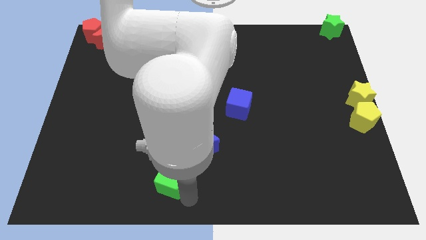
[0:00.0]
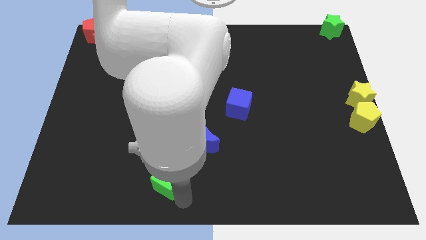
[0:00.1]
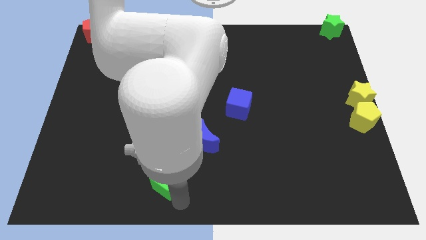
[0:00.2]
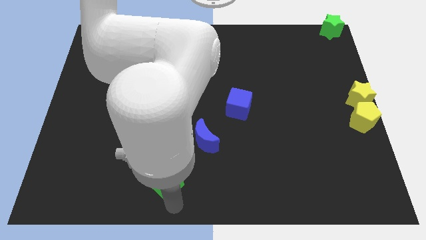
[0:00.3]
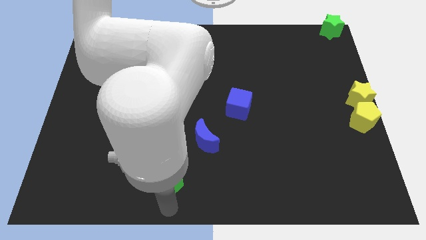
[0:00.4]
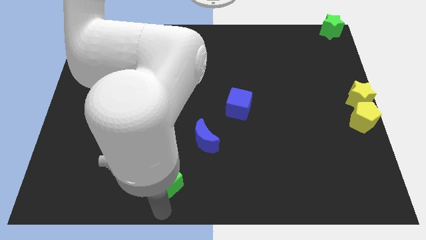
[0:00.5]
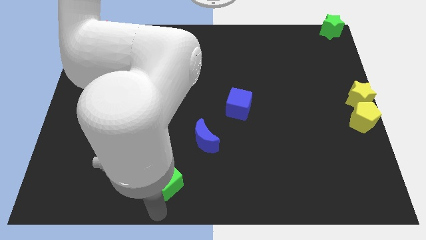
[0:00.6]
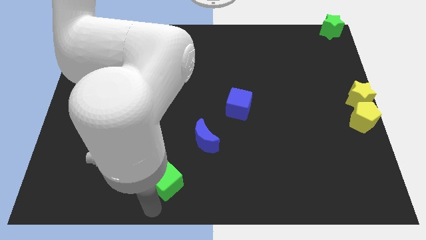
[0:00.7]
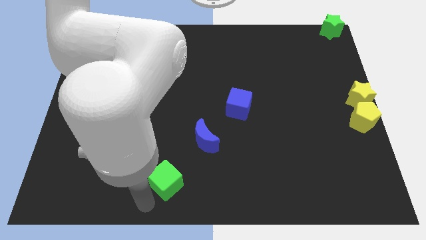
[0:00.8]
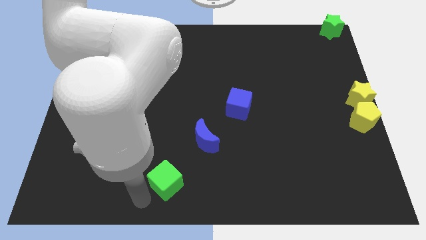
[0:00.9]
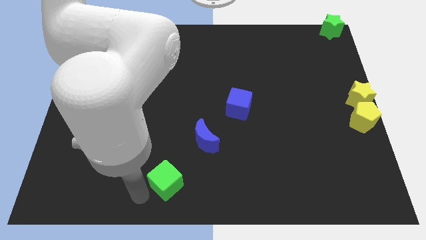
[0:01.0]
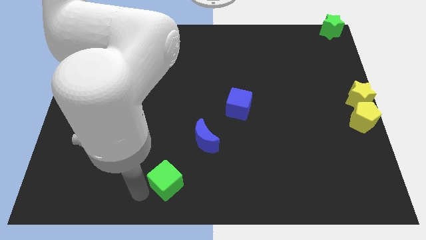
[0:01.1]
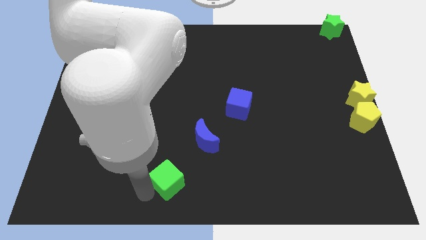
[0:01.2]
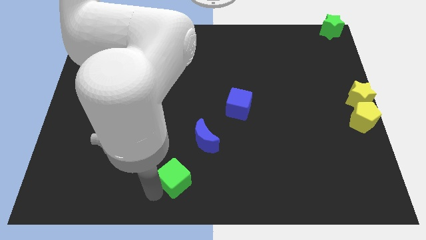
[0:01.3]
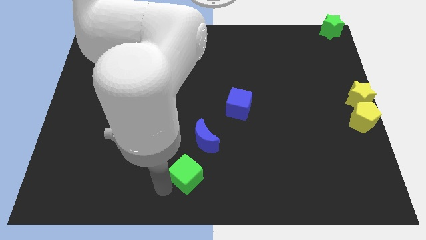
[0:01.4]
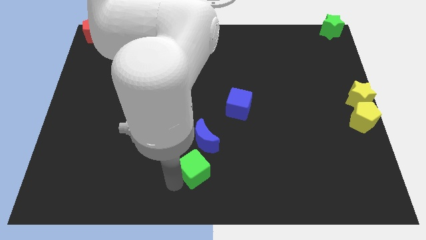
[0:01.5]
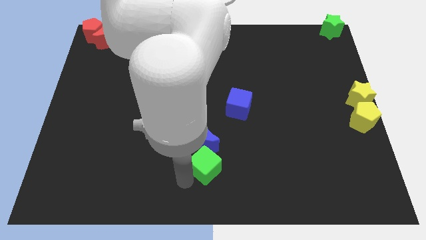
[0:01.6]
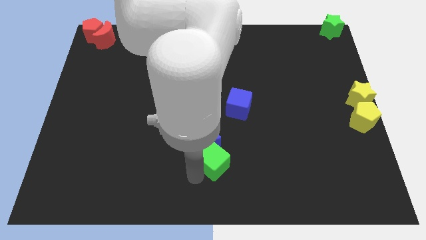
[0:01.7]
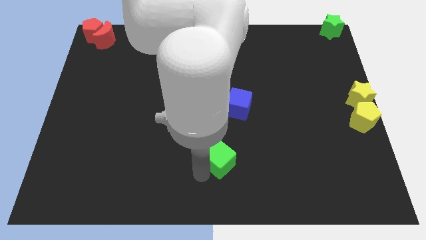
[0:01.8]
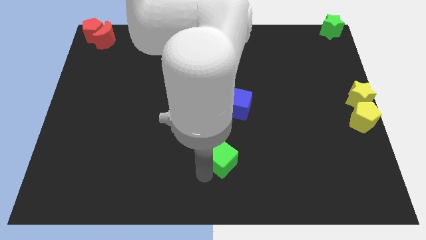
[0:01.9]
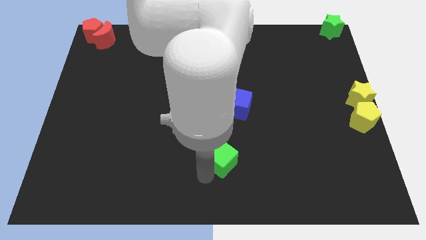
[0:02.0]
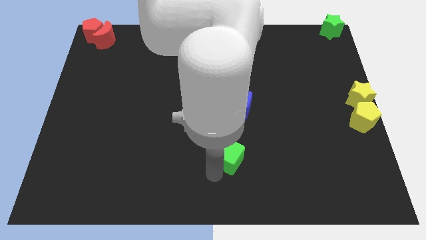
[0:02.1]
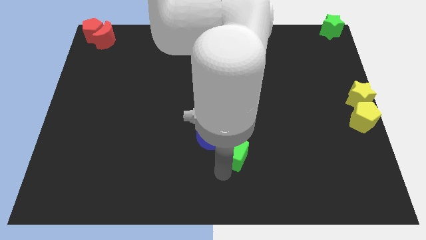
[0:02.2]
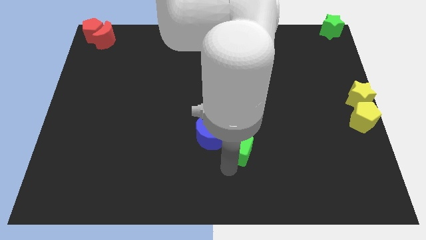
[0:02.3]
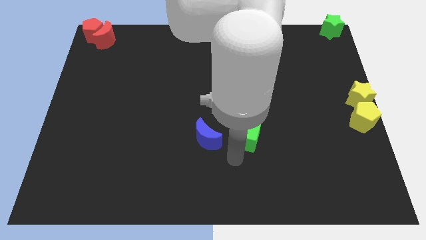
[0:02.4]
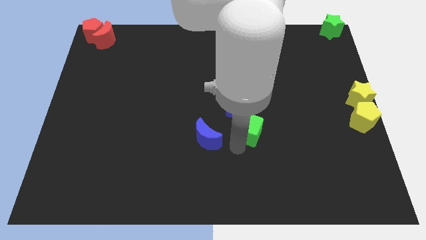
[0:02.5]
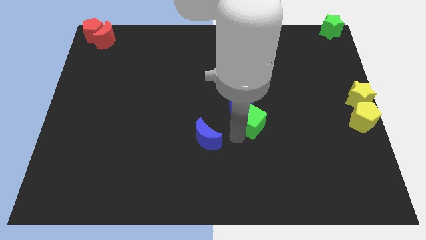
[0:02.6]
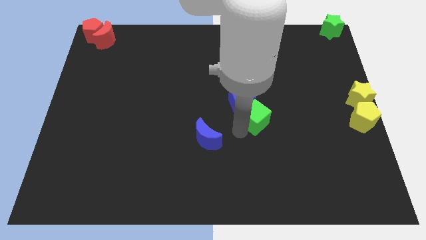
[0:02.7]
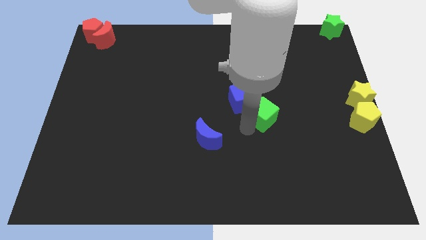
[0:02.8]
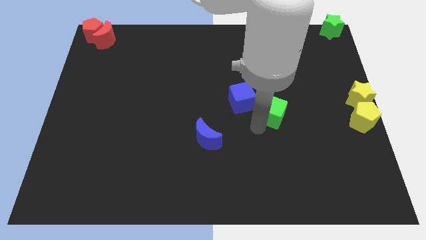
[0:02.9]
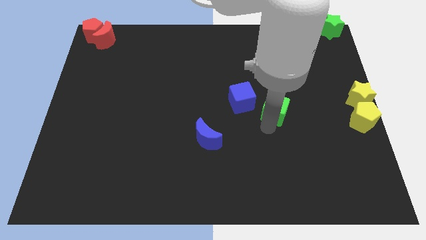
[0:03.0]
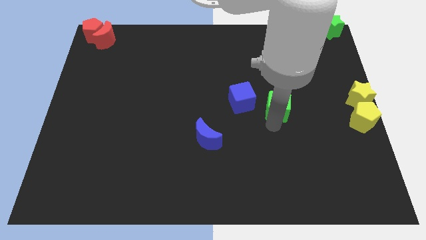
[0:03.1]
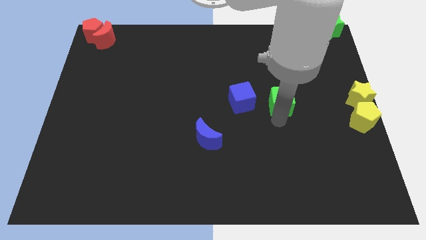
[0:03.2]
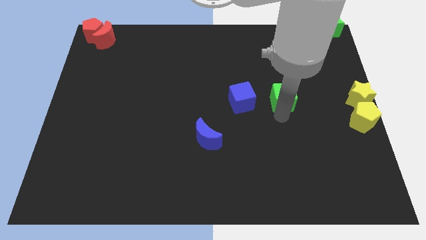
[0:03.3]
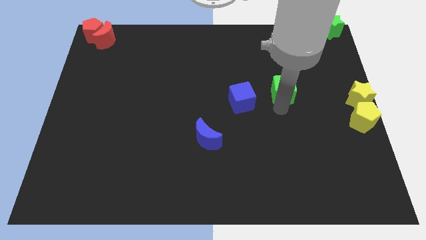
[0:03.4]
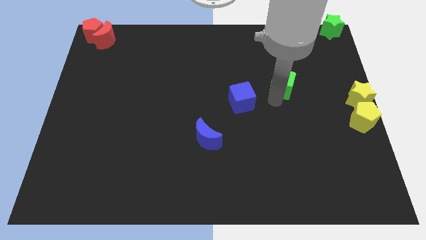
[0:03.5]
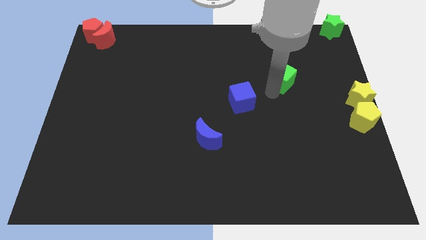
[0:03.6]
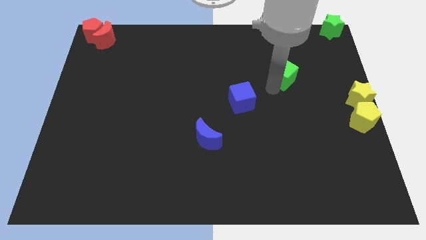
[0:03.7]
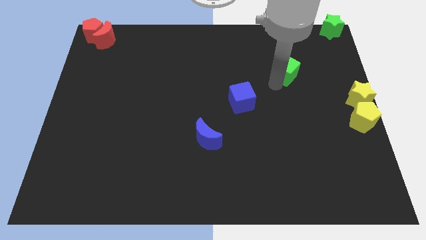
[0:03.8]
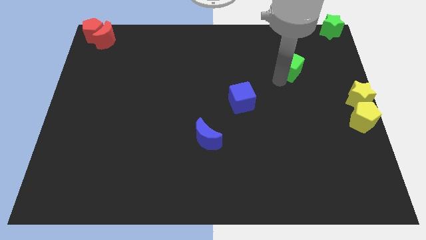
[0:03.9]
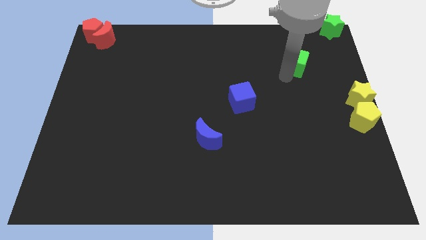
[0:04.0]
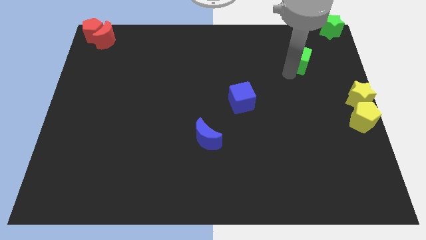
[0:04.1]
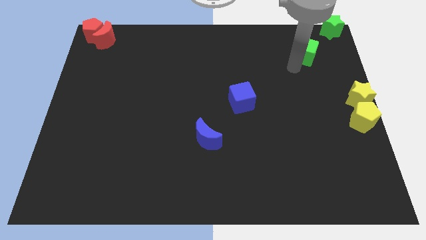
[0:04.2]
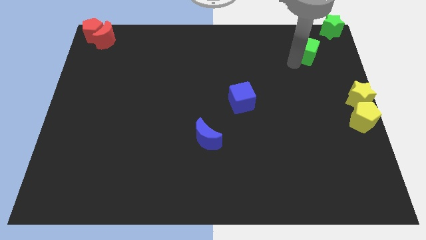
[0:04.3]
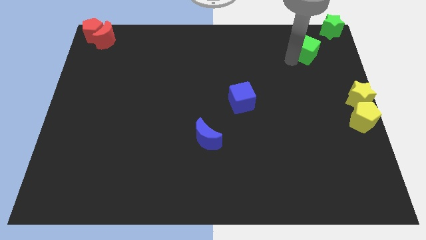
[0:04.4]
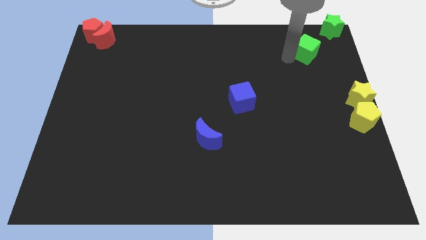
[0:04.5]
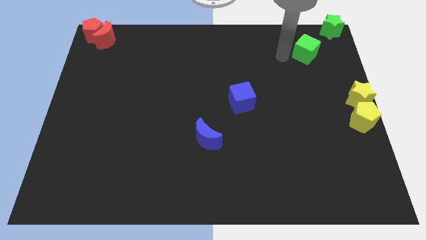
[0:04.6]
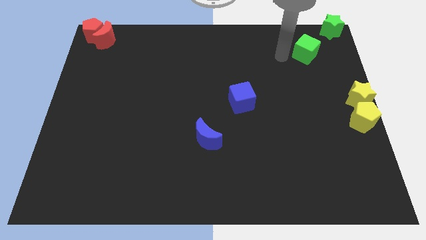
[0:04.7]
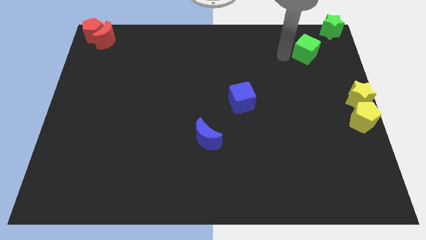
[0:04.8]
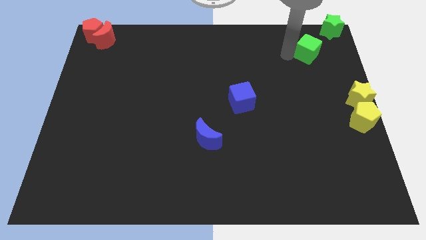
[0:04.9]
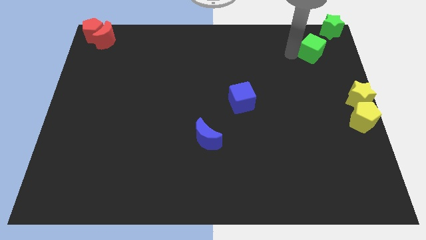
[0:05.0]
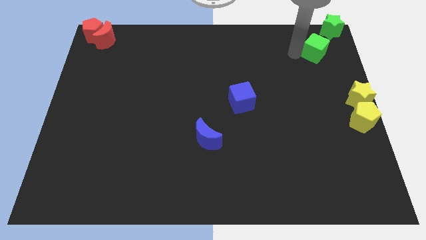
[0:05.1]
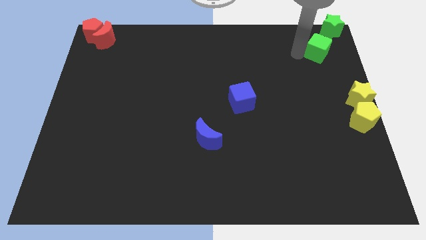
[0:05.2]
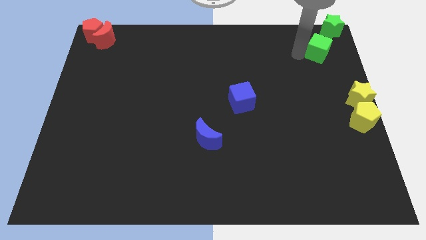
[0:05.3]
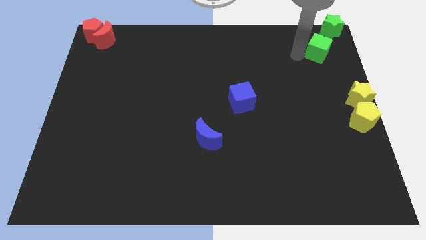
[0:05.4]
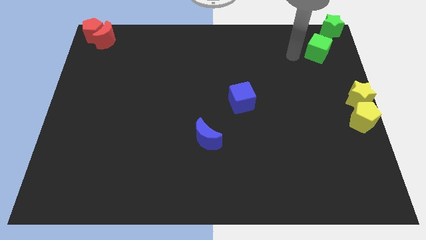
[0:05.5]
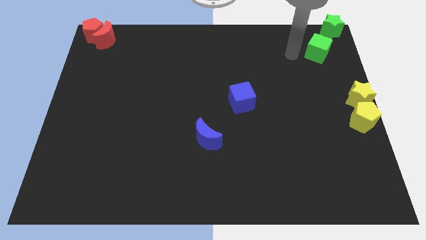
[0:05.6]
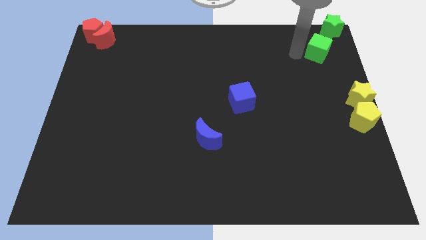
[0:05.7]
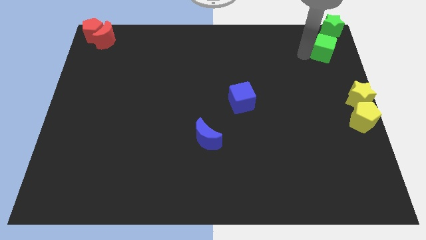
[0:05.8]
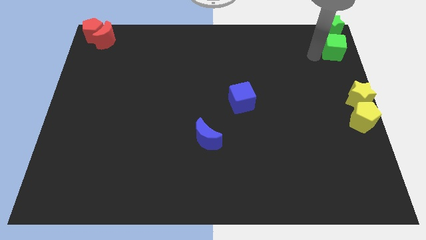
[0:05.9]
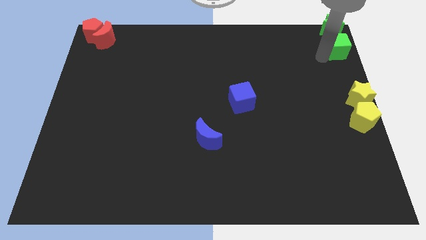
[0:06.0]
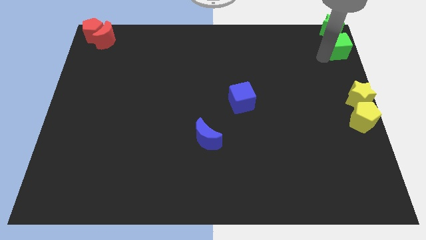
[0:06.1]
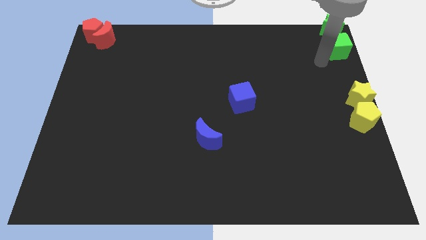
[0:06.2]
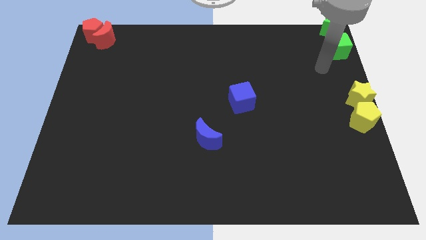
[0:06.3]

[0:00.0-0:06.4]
drag the green cube to the bottom of the green star

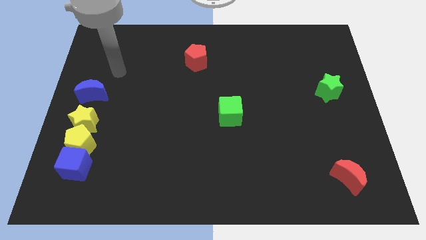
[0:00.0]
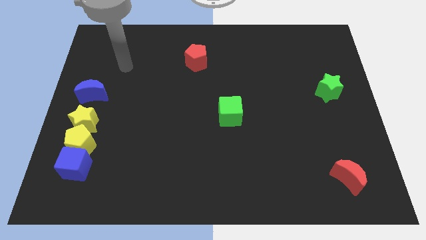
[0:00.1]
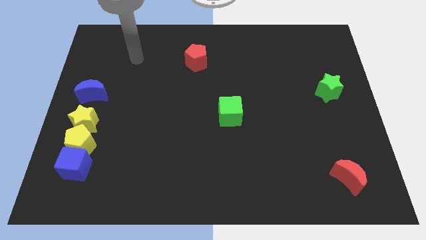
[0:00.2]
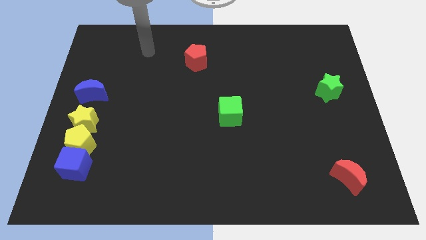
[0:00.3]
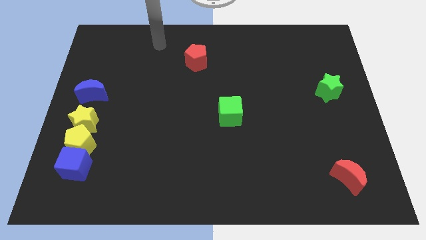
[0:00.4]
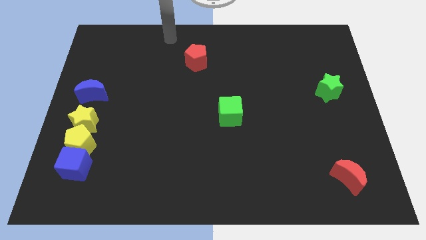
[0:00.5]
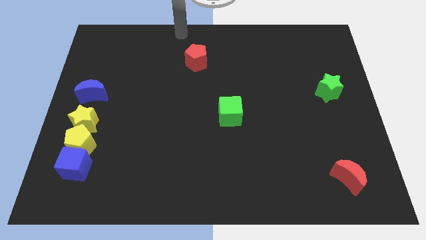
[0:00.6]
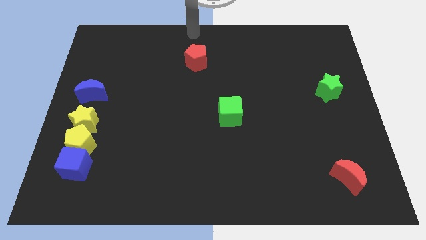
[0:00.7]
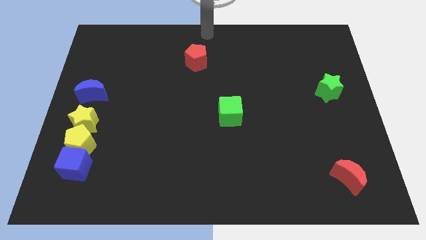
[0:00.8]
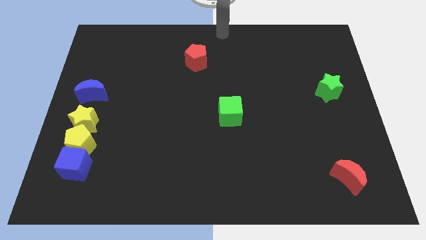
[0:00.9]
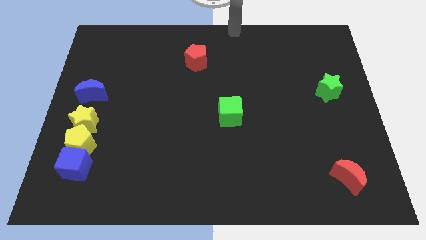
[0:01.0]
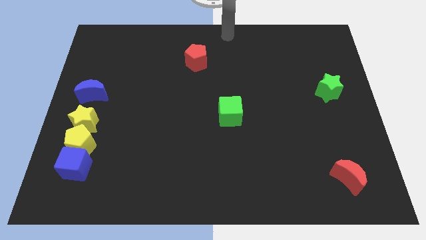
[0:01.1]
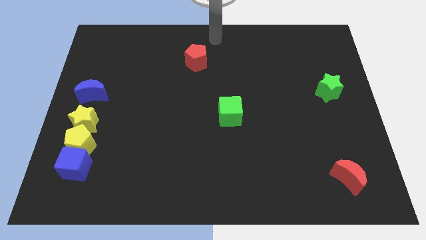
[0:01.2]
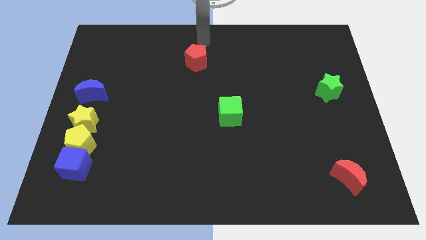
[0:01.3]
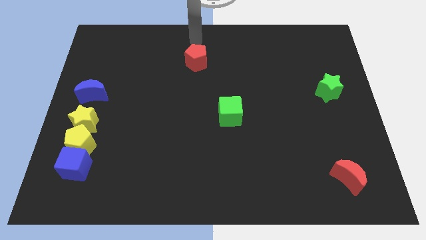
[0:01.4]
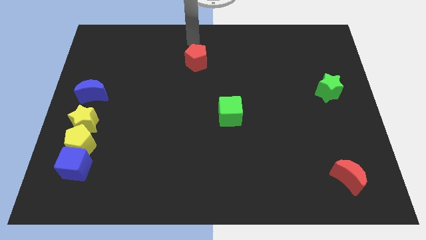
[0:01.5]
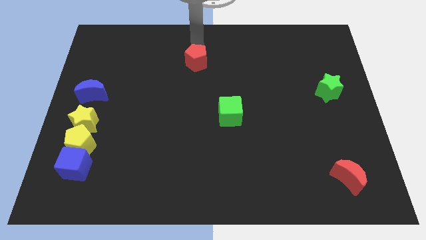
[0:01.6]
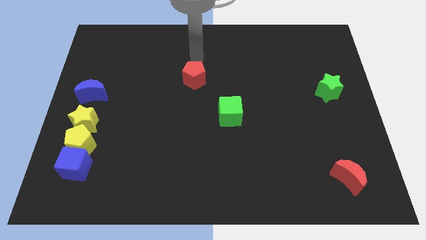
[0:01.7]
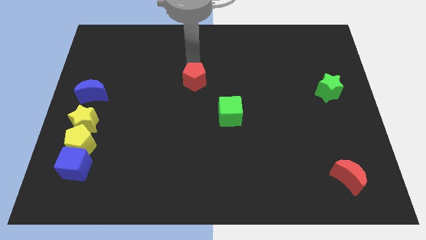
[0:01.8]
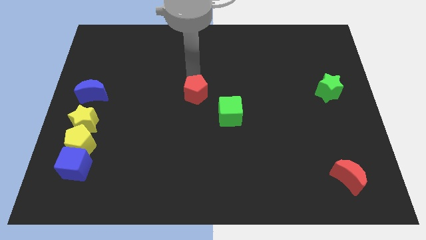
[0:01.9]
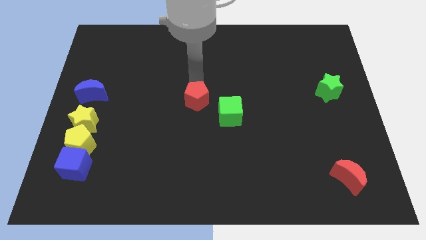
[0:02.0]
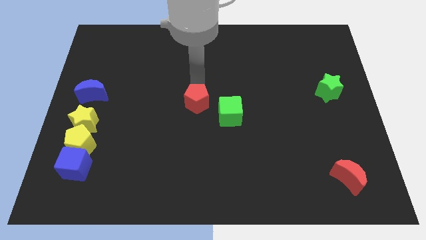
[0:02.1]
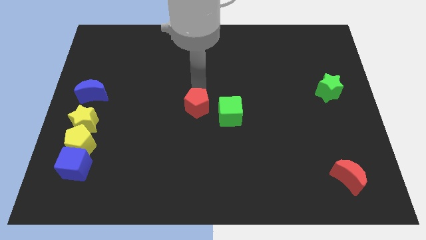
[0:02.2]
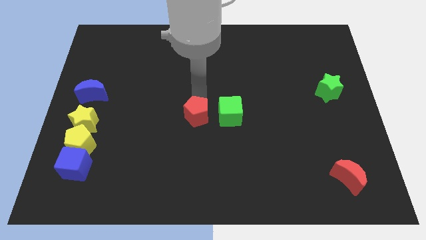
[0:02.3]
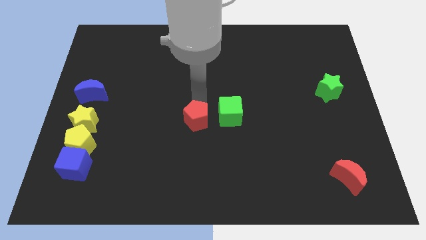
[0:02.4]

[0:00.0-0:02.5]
place the red pentagon to the left of the green cube

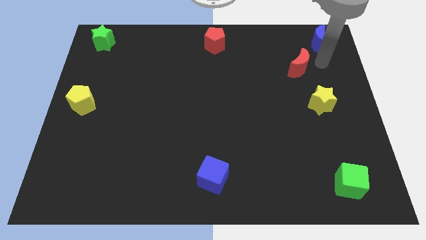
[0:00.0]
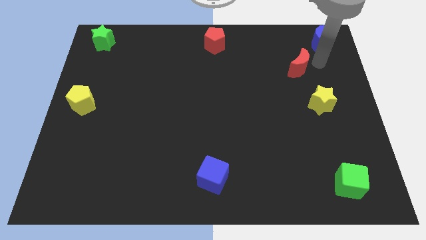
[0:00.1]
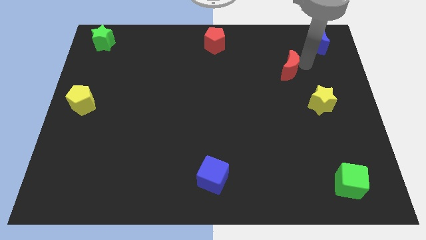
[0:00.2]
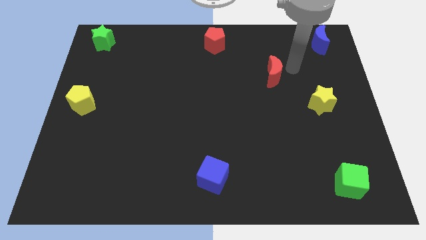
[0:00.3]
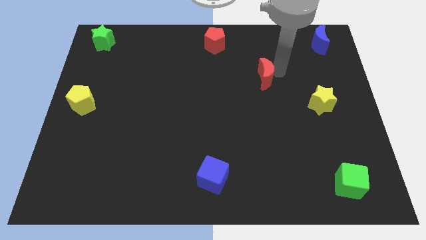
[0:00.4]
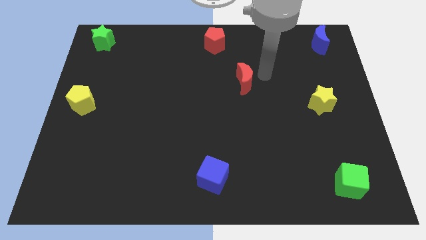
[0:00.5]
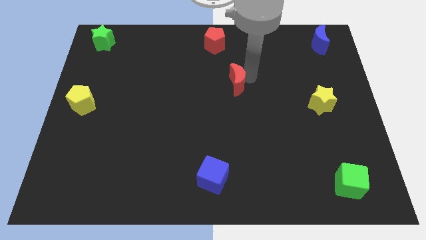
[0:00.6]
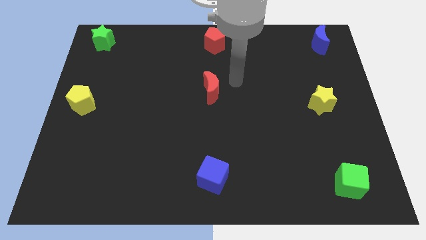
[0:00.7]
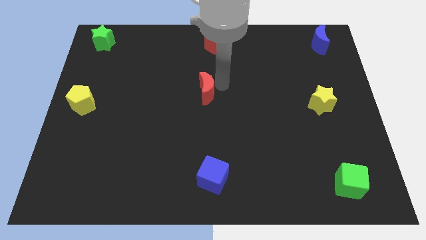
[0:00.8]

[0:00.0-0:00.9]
move the red crescent to the center of the board
